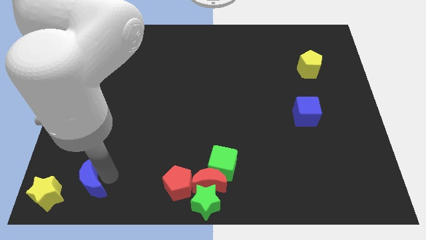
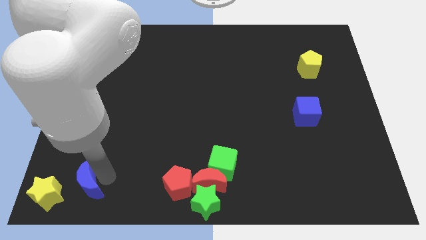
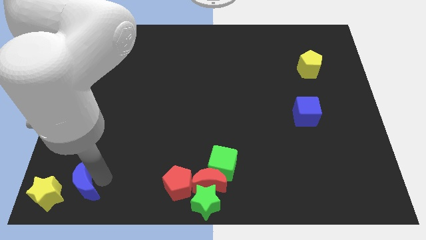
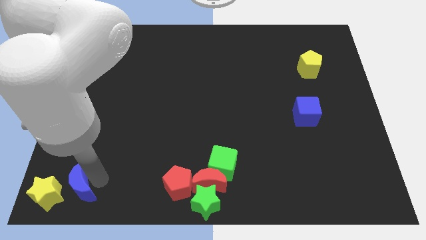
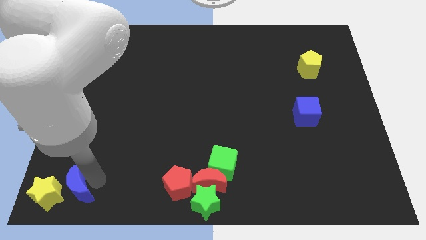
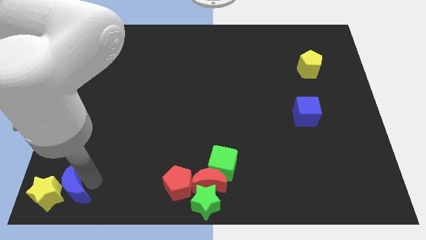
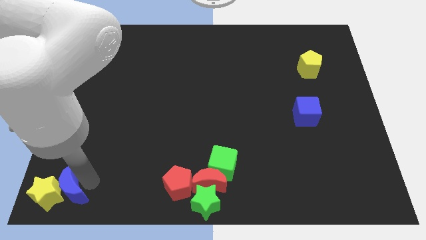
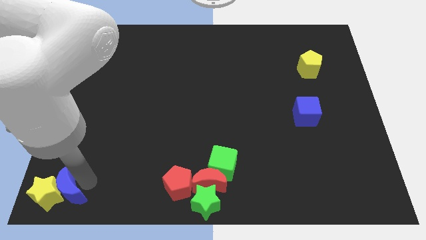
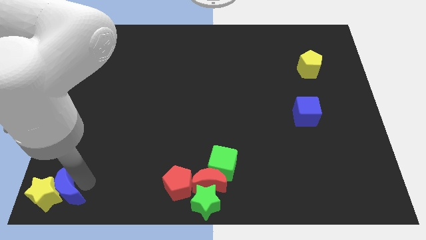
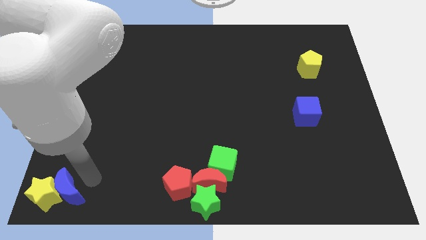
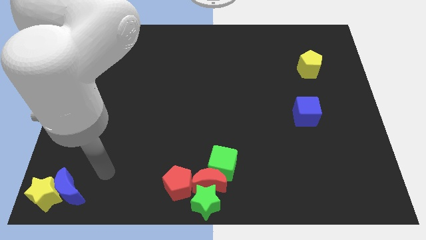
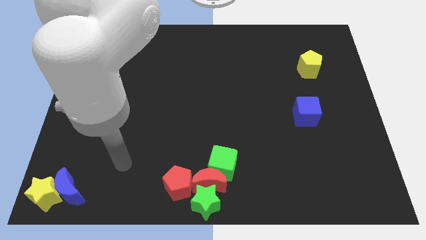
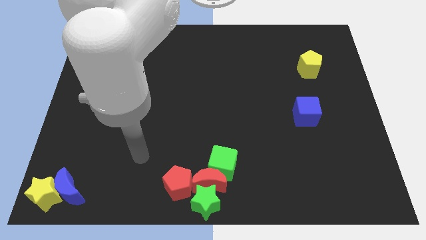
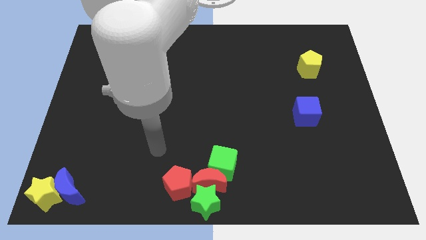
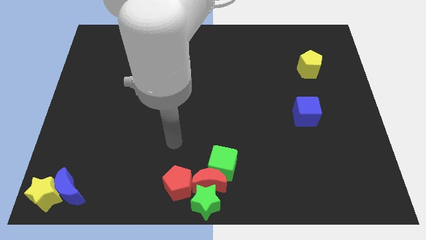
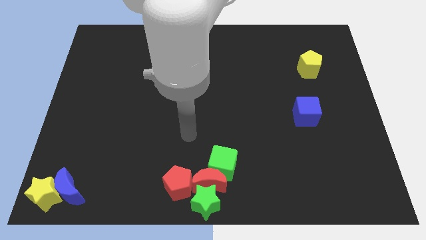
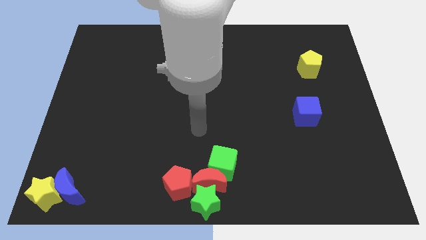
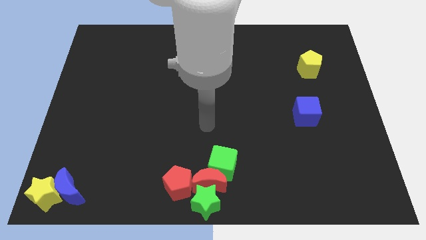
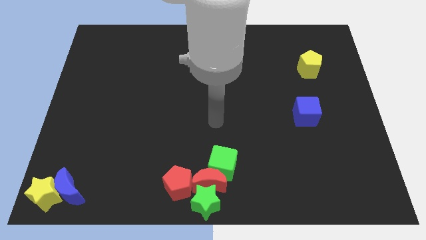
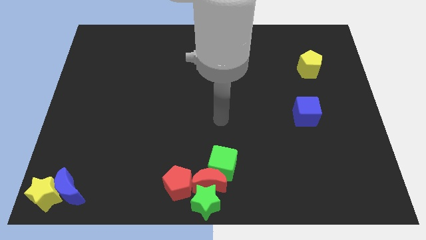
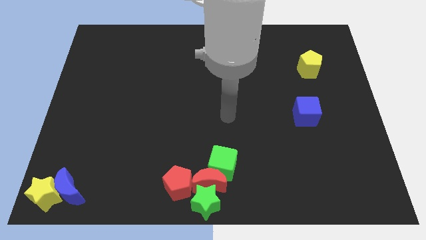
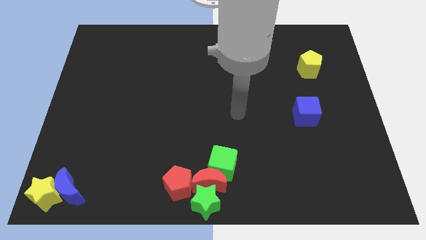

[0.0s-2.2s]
push the blue crescent into the yellow star

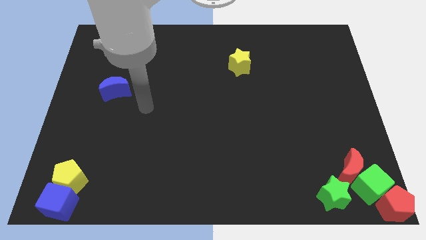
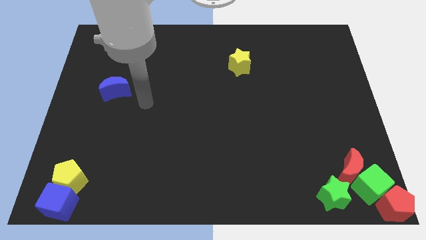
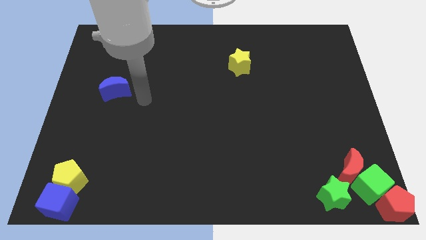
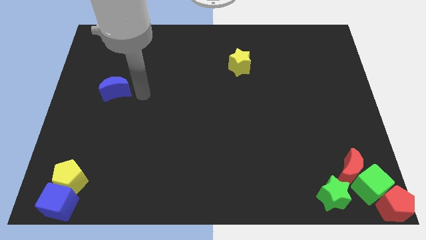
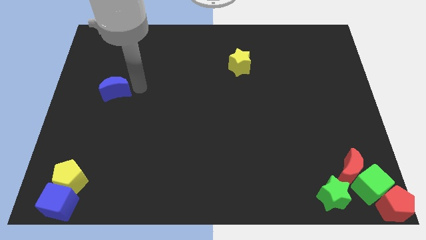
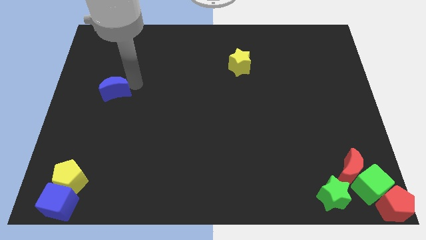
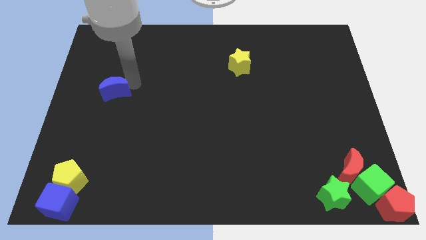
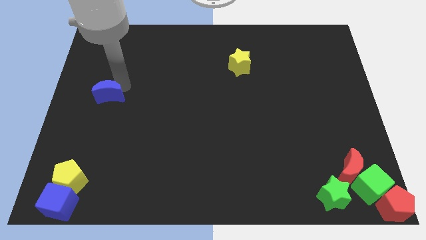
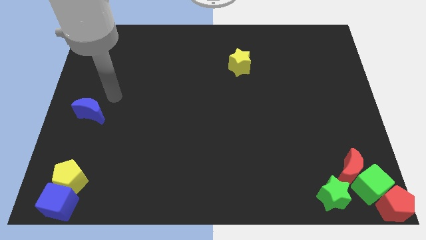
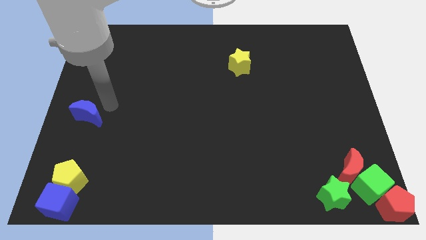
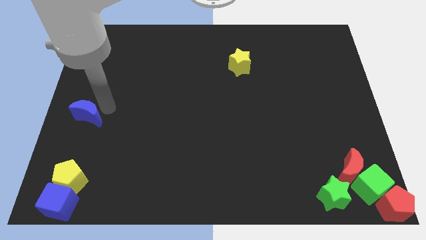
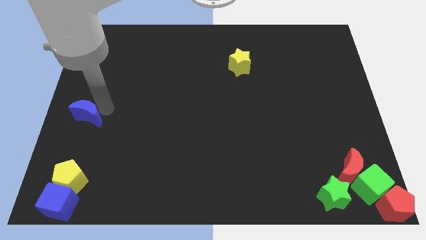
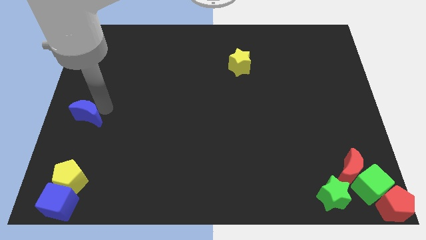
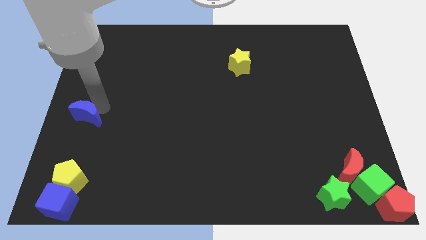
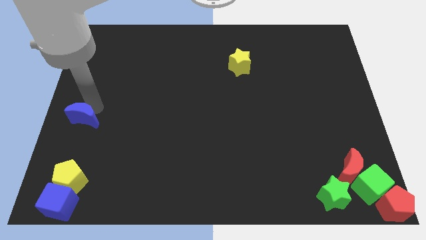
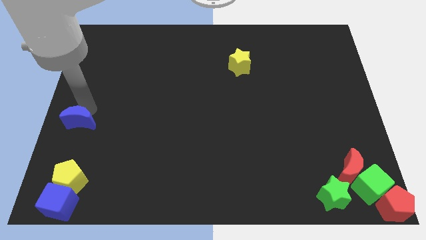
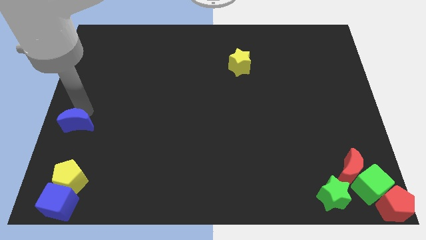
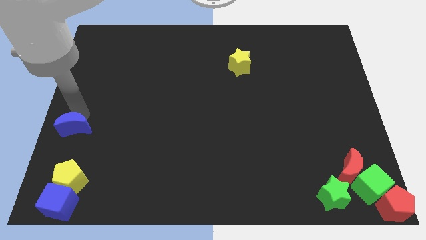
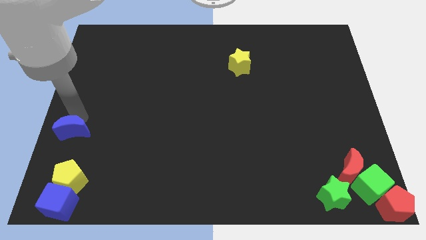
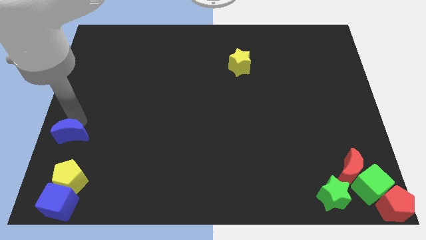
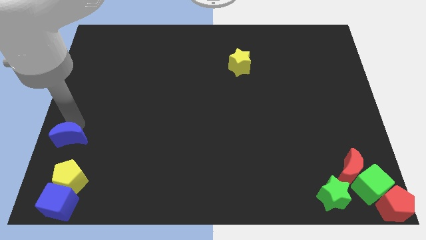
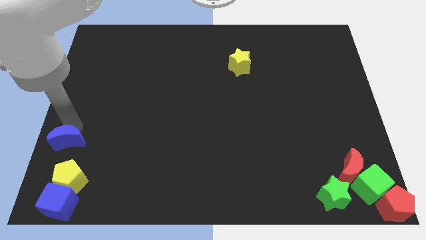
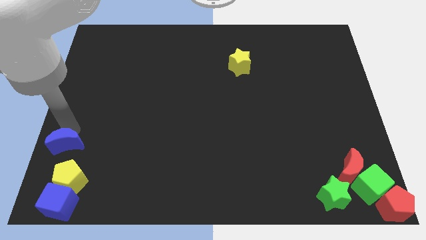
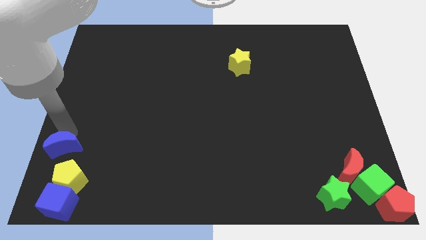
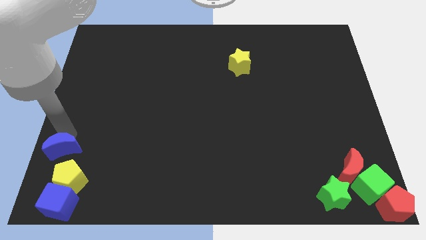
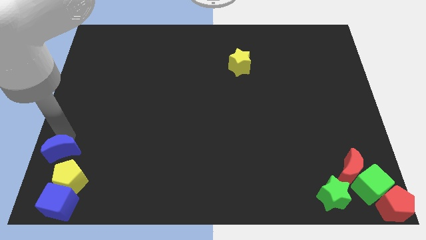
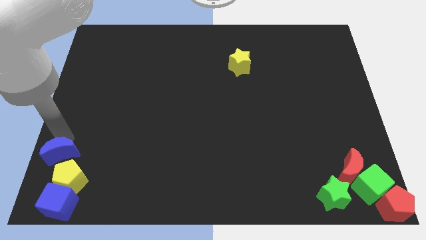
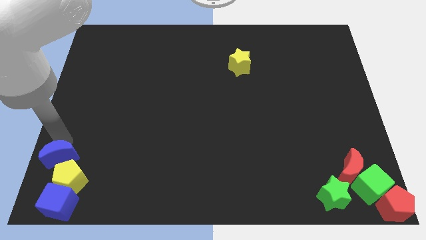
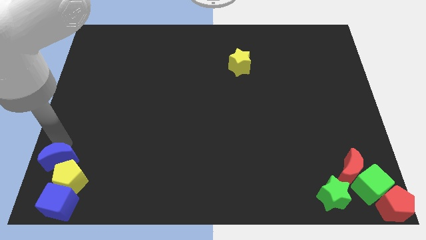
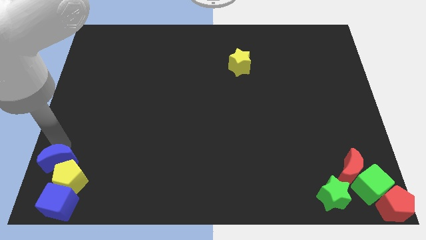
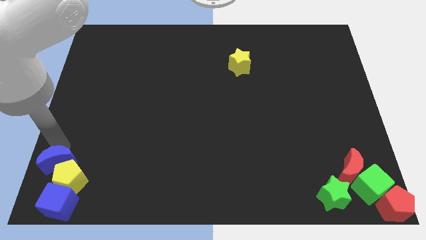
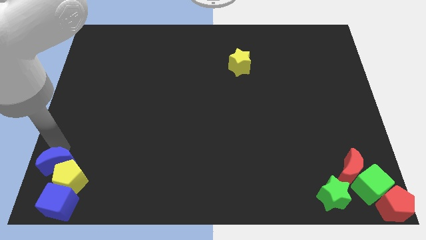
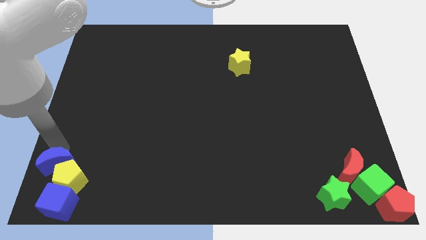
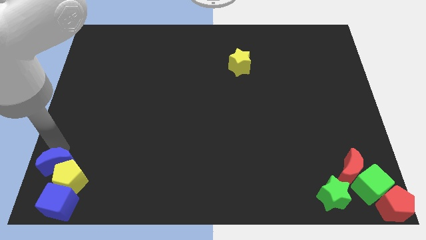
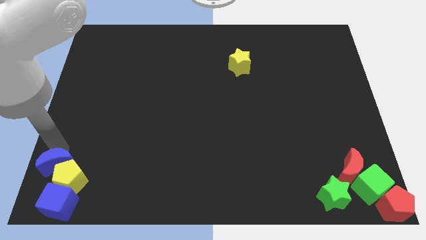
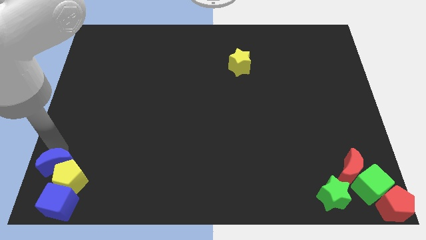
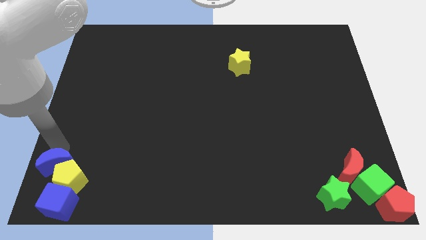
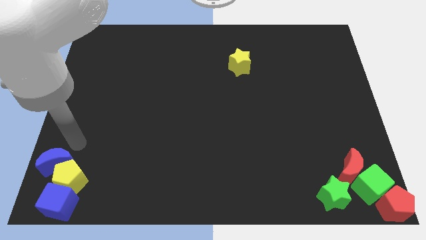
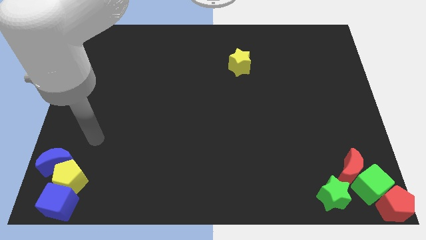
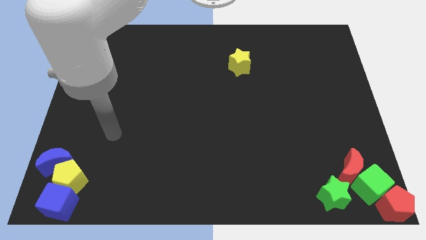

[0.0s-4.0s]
push the blue crescent on the top left of the yellow pentagon

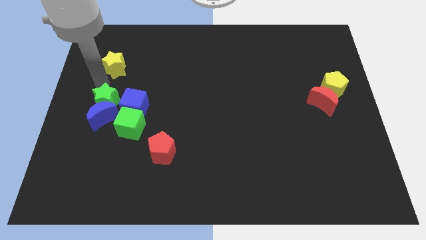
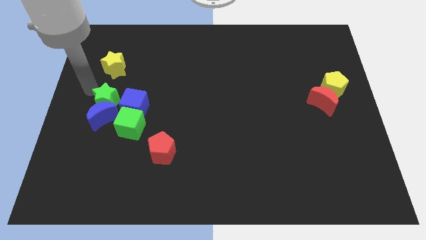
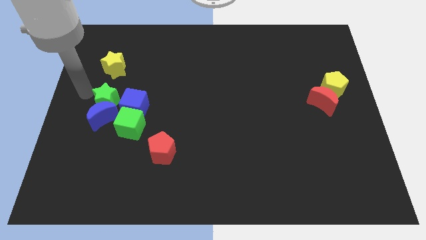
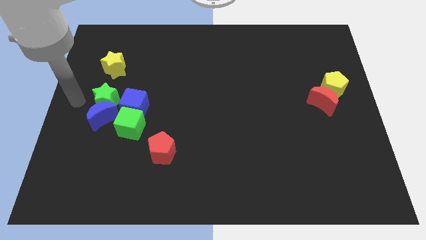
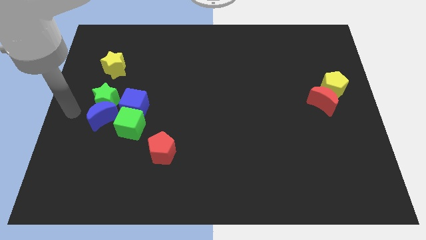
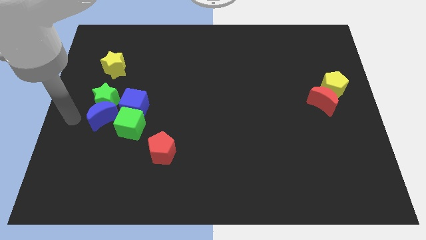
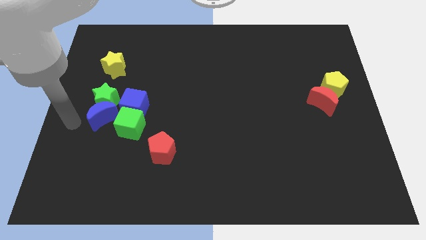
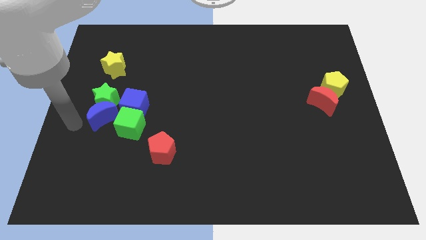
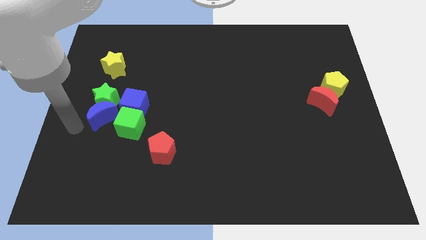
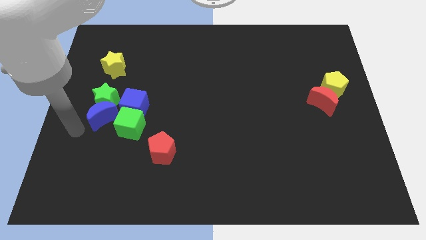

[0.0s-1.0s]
place the pointer to the left of the blue moon

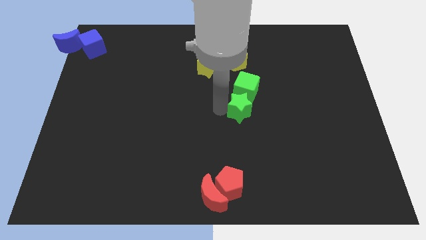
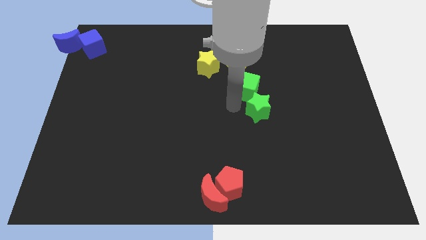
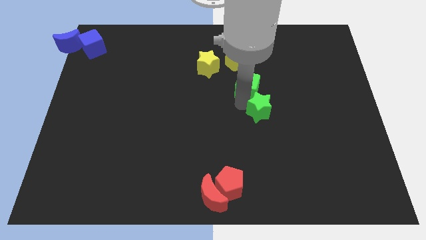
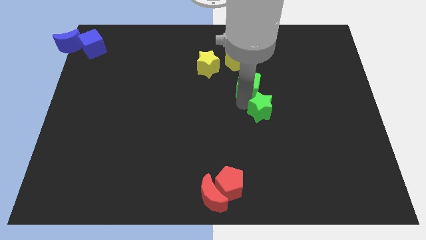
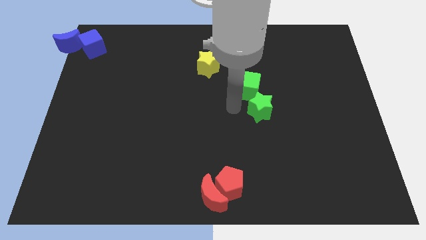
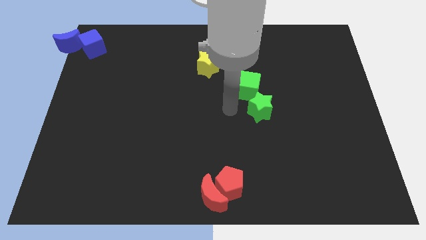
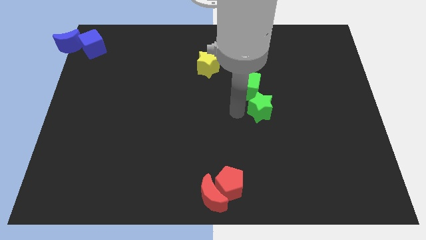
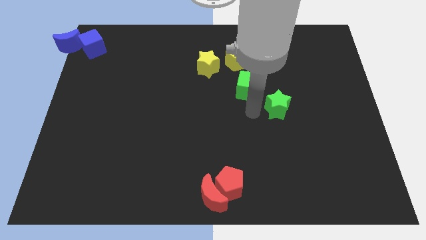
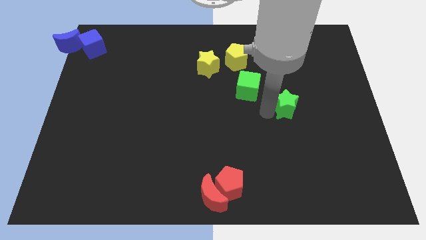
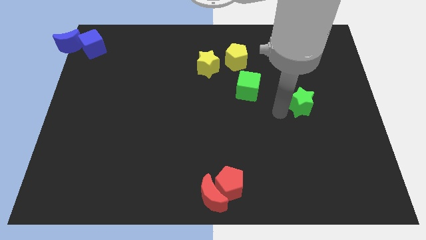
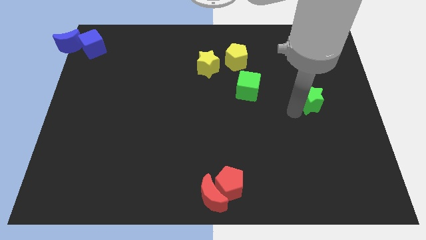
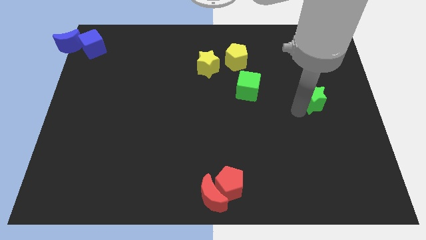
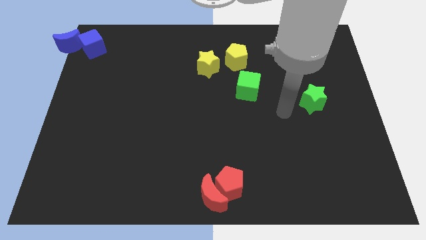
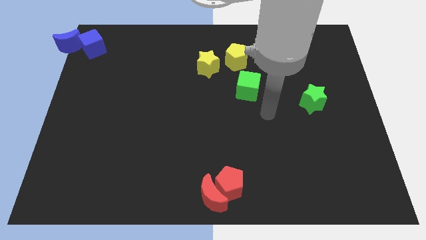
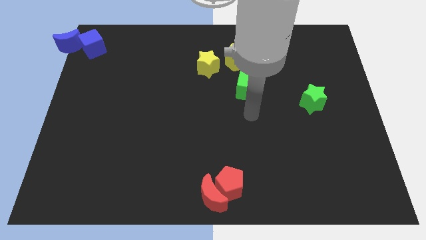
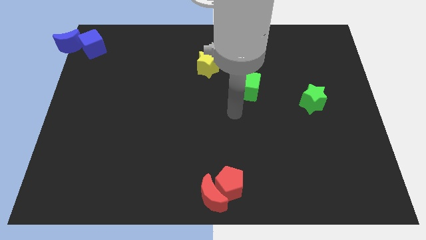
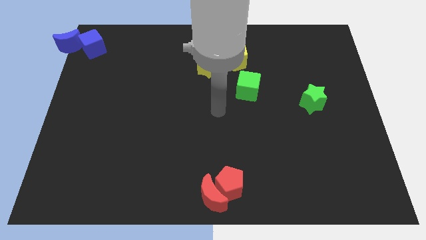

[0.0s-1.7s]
separate the green star from the green cube
